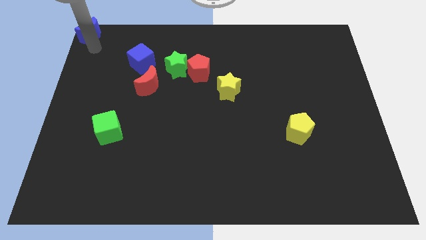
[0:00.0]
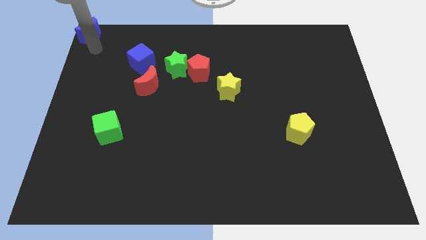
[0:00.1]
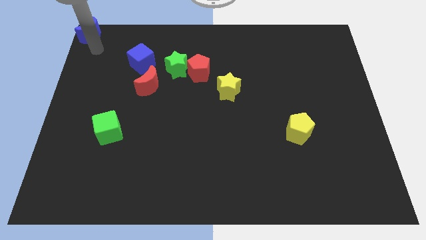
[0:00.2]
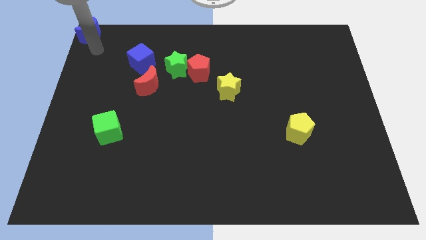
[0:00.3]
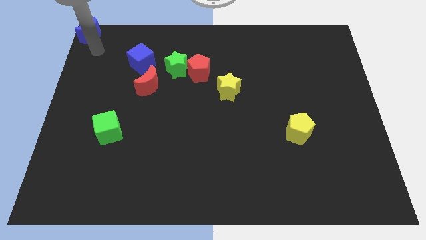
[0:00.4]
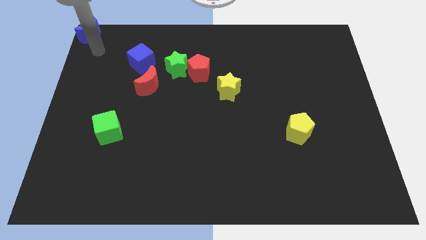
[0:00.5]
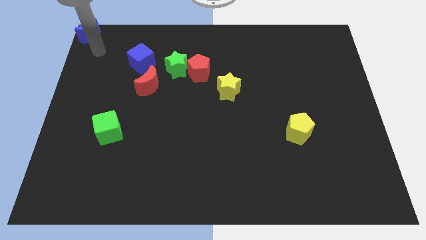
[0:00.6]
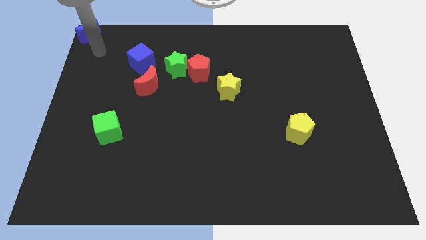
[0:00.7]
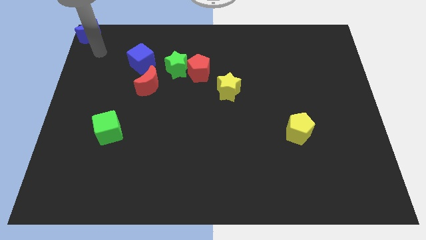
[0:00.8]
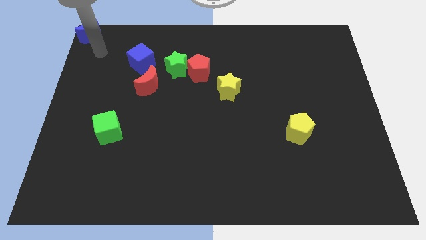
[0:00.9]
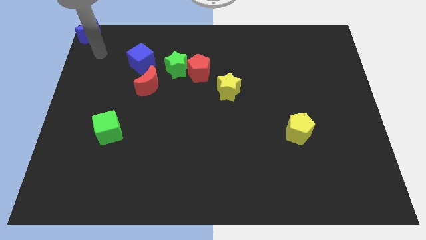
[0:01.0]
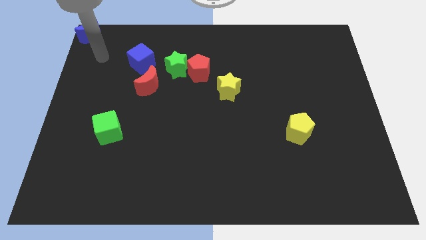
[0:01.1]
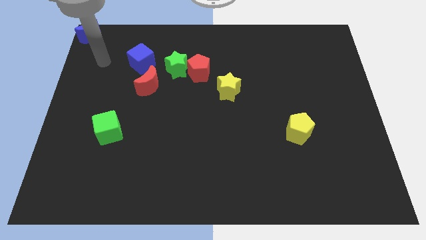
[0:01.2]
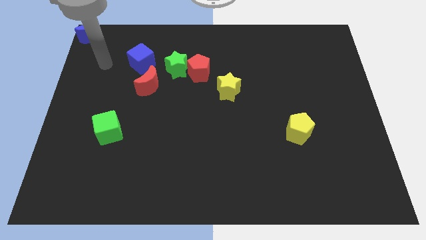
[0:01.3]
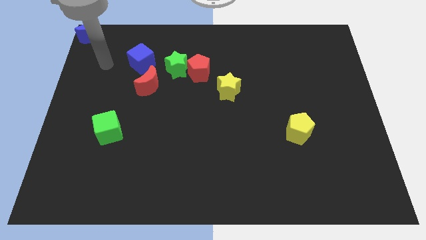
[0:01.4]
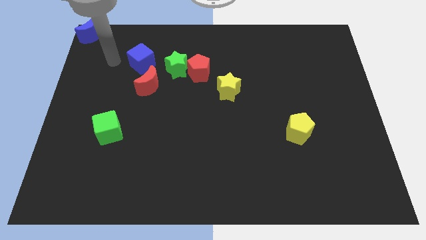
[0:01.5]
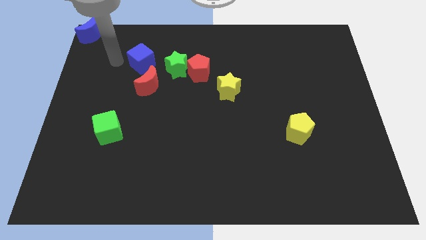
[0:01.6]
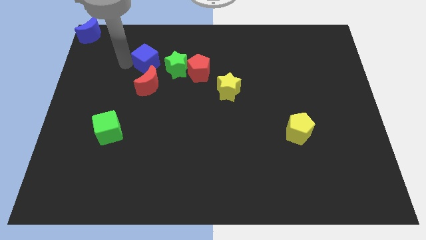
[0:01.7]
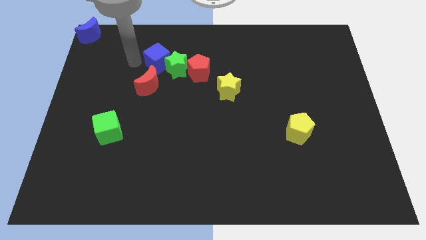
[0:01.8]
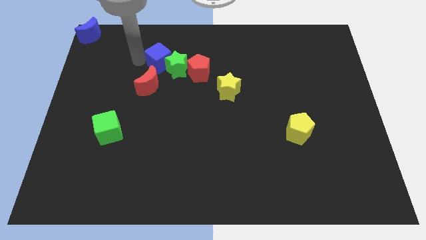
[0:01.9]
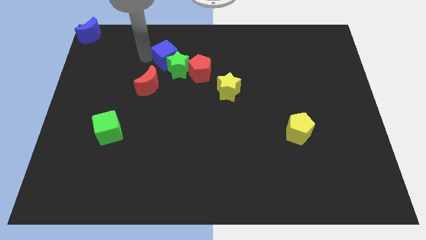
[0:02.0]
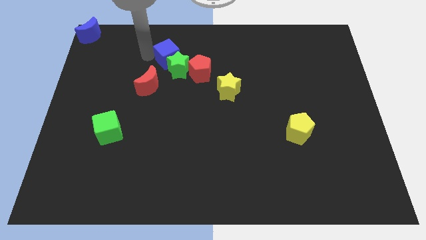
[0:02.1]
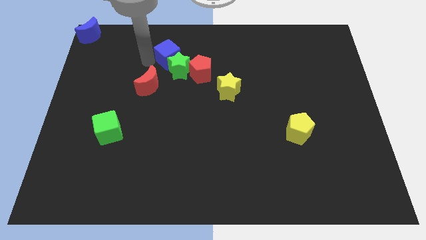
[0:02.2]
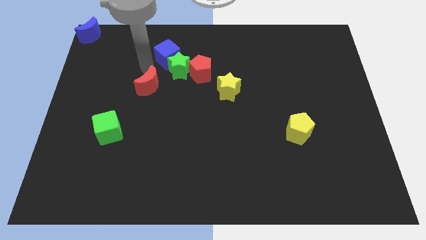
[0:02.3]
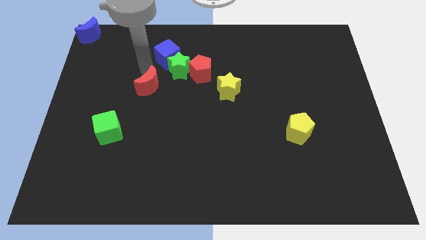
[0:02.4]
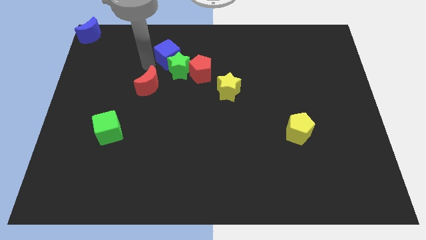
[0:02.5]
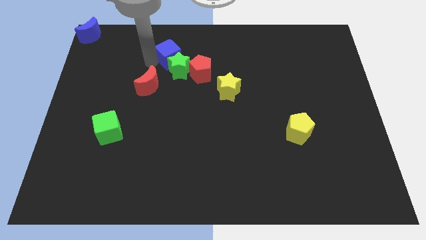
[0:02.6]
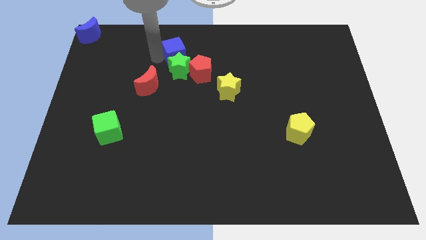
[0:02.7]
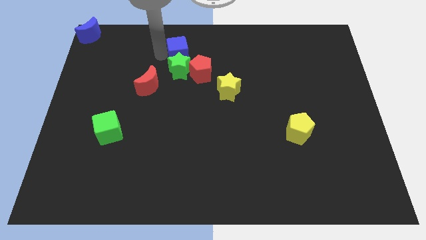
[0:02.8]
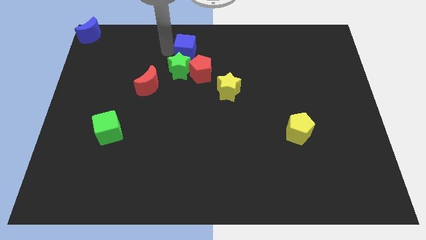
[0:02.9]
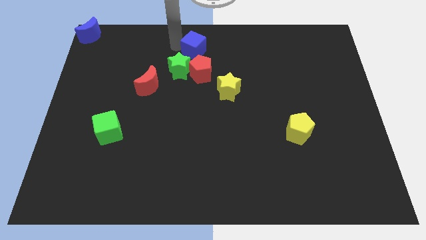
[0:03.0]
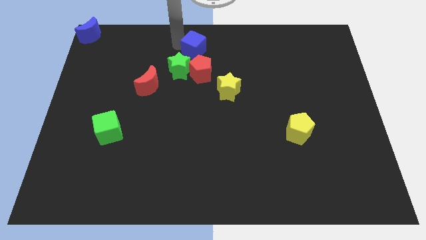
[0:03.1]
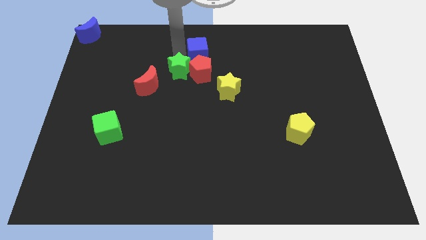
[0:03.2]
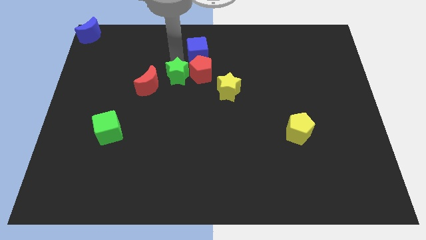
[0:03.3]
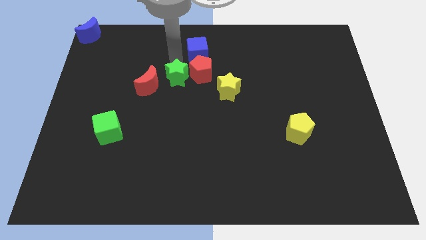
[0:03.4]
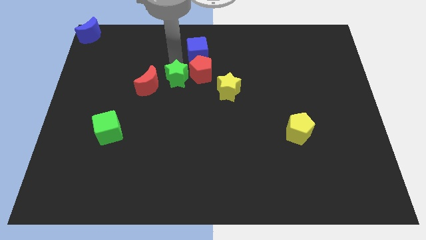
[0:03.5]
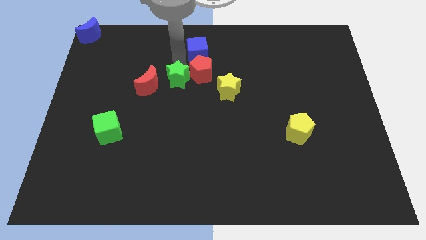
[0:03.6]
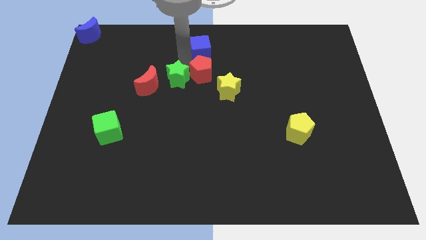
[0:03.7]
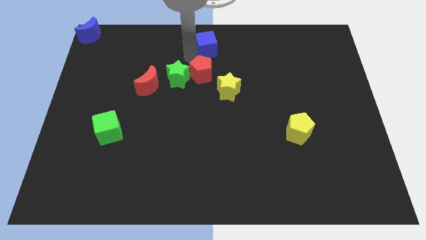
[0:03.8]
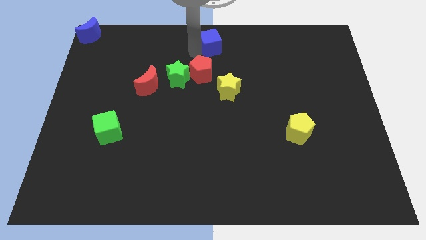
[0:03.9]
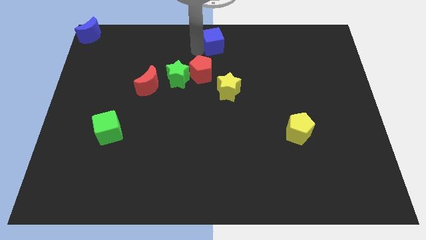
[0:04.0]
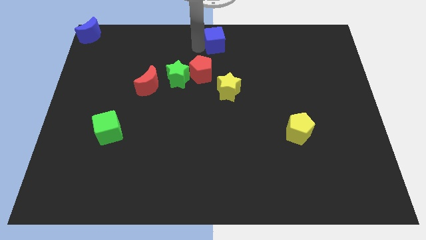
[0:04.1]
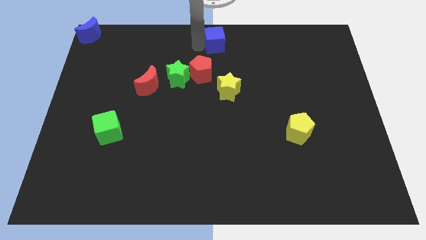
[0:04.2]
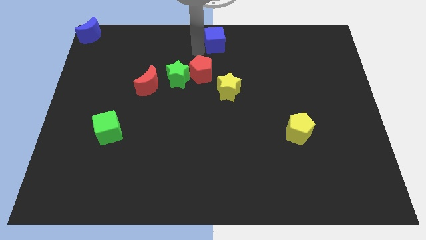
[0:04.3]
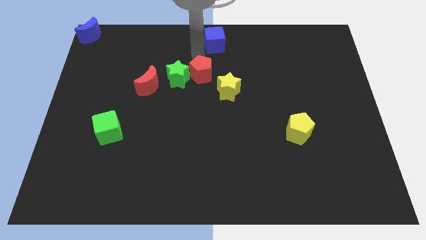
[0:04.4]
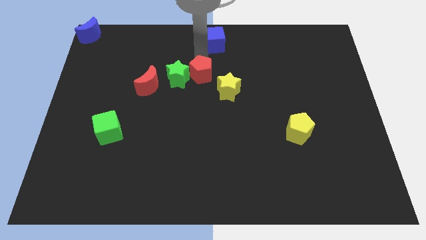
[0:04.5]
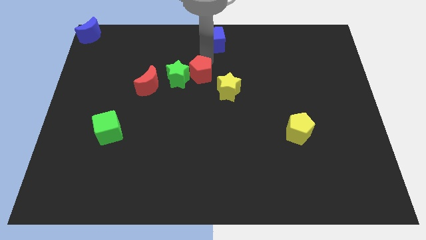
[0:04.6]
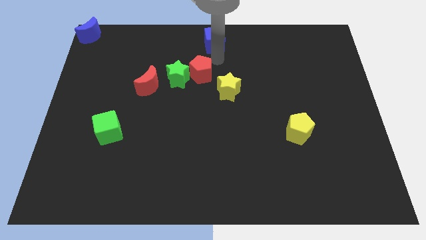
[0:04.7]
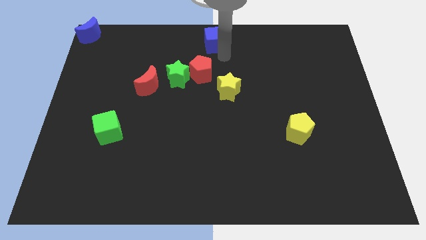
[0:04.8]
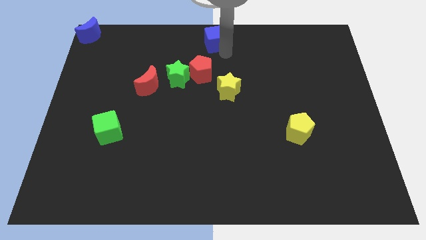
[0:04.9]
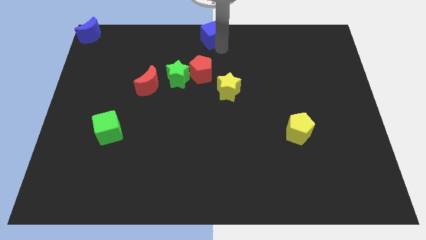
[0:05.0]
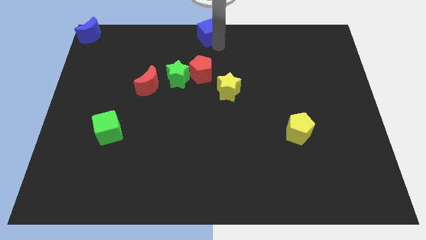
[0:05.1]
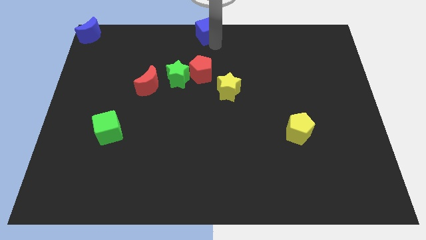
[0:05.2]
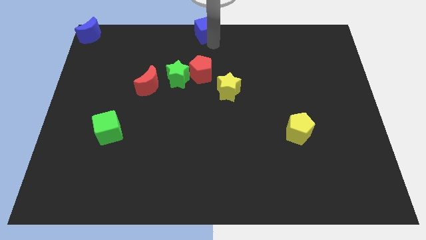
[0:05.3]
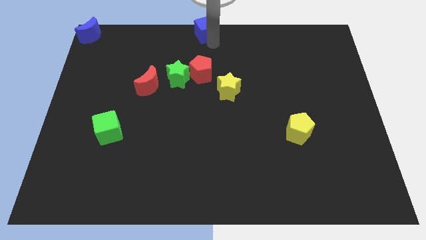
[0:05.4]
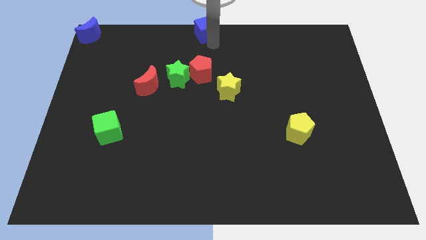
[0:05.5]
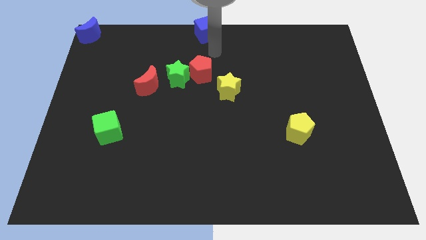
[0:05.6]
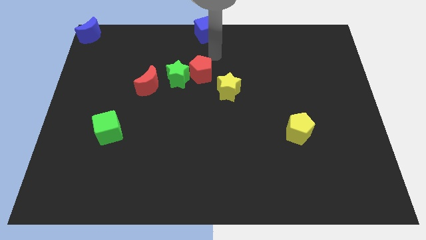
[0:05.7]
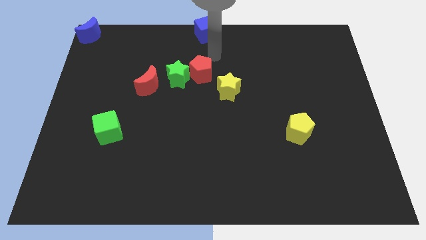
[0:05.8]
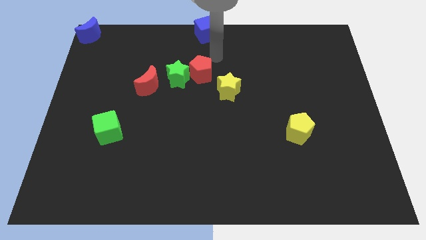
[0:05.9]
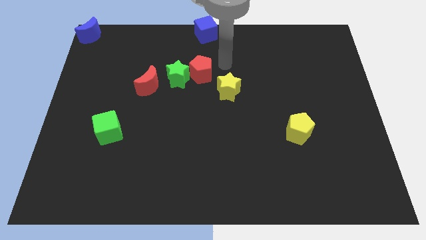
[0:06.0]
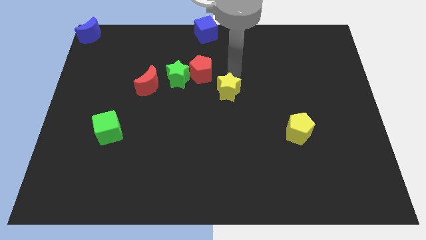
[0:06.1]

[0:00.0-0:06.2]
move the blue cube to the top center of the board

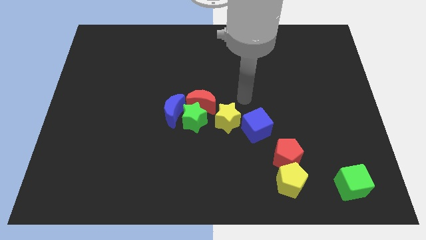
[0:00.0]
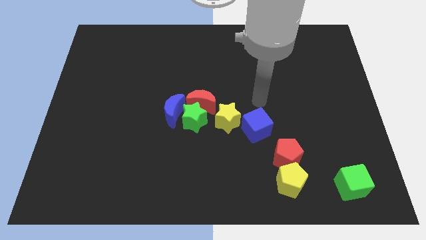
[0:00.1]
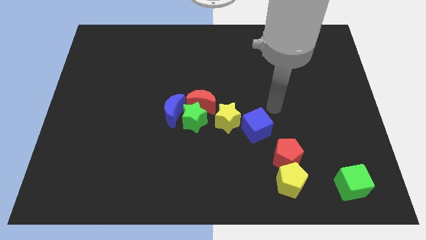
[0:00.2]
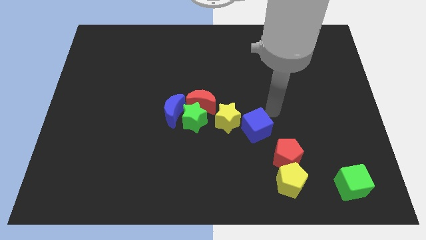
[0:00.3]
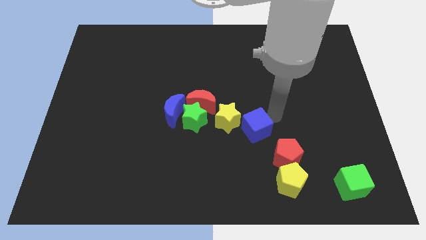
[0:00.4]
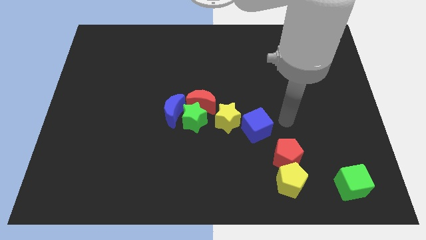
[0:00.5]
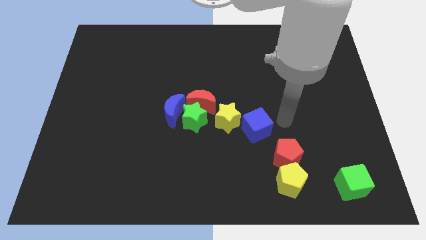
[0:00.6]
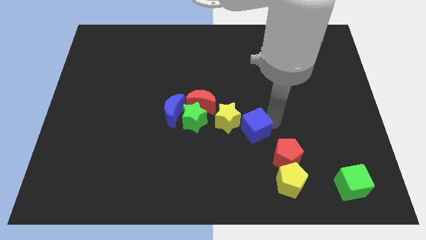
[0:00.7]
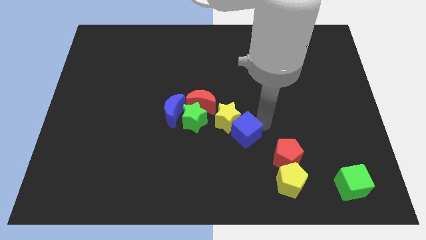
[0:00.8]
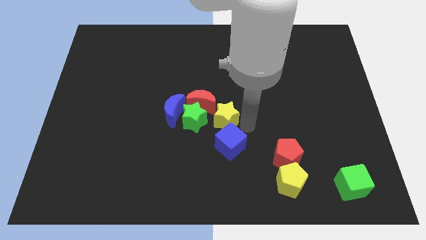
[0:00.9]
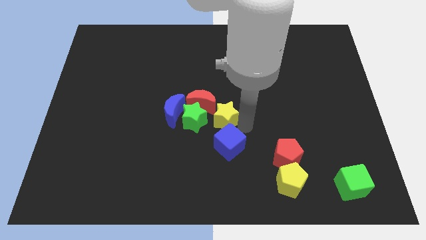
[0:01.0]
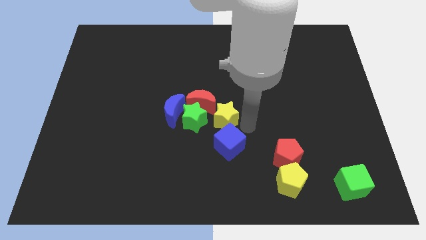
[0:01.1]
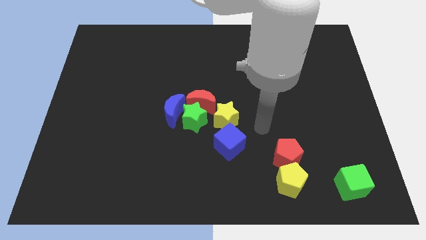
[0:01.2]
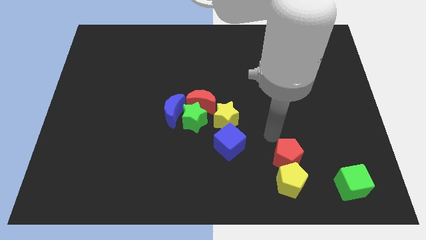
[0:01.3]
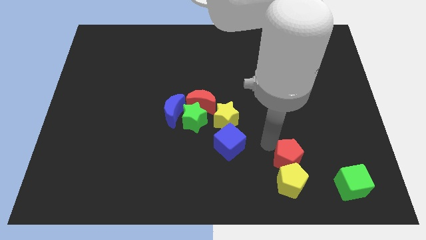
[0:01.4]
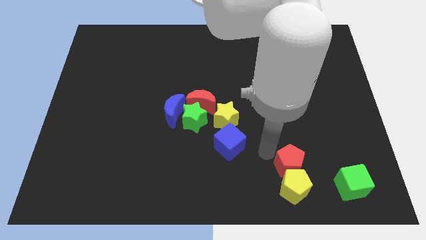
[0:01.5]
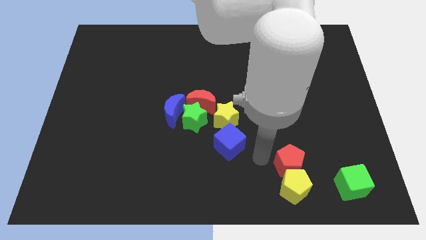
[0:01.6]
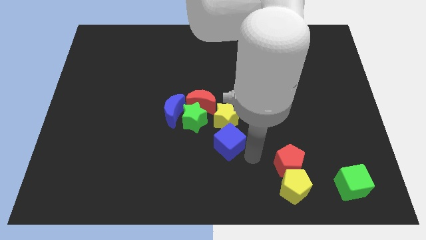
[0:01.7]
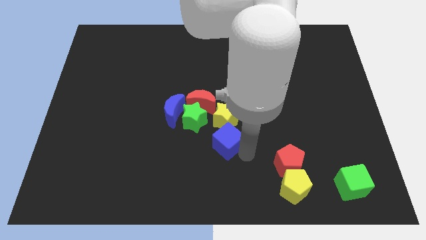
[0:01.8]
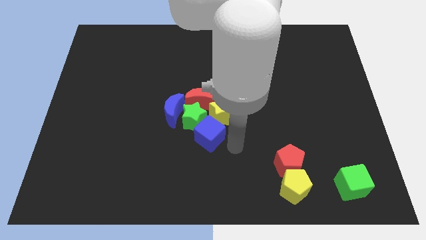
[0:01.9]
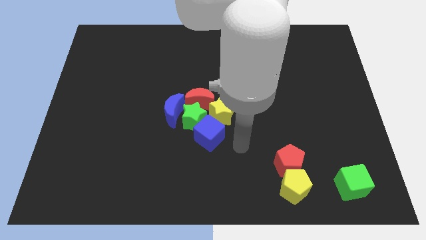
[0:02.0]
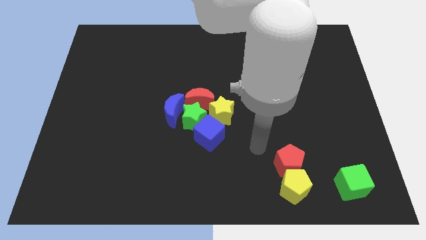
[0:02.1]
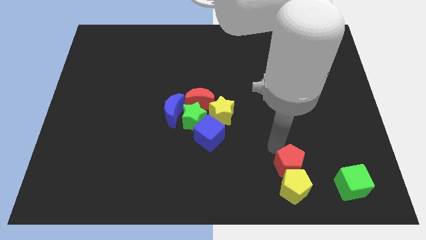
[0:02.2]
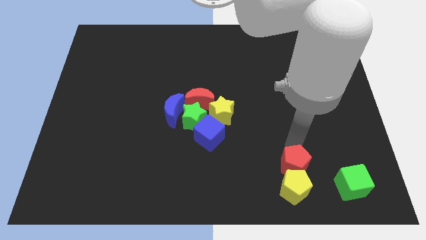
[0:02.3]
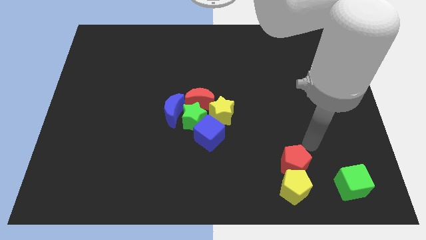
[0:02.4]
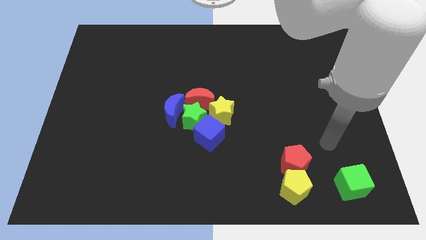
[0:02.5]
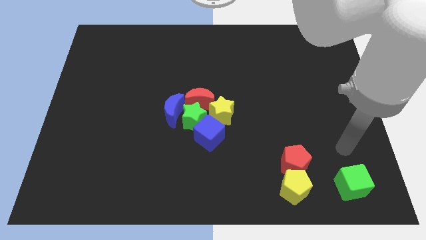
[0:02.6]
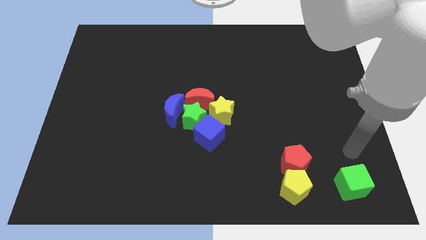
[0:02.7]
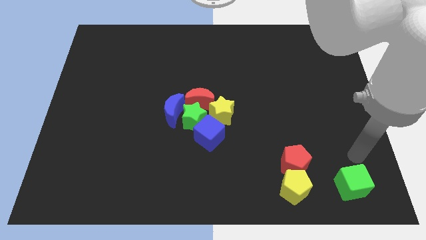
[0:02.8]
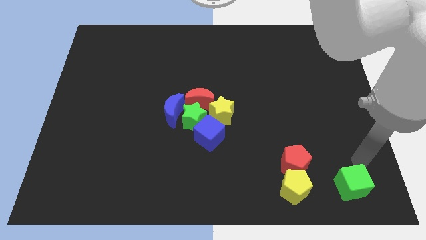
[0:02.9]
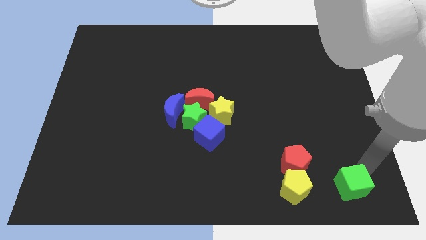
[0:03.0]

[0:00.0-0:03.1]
slide the blue cube into the green star
